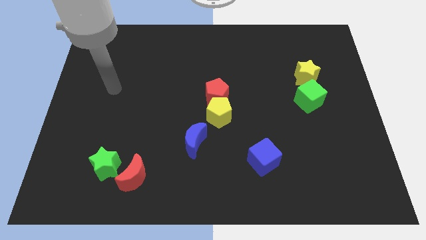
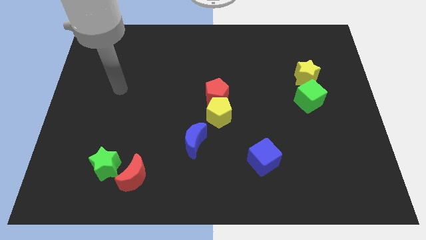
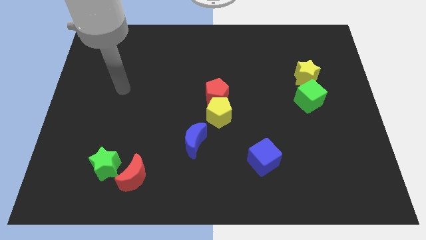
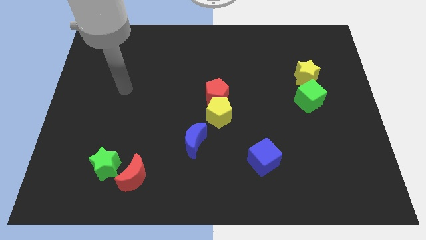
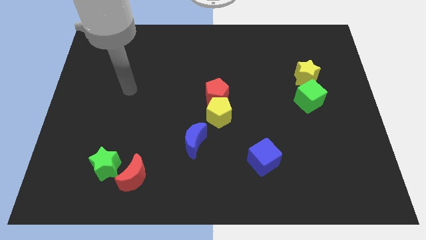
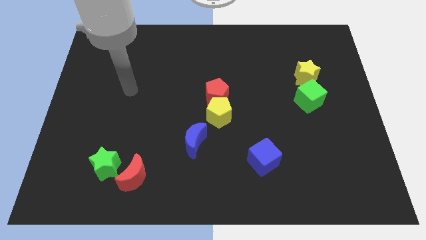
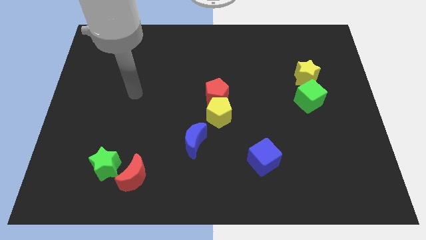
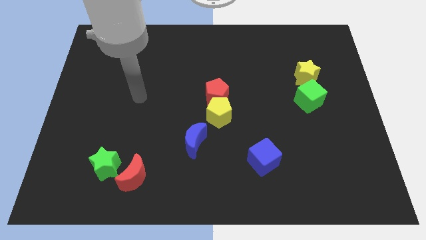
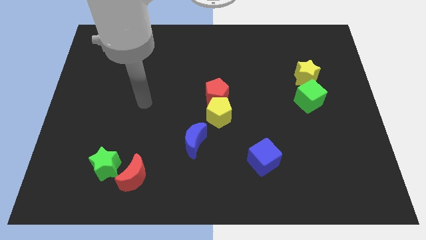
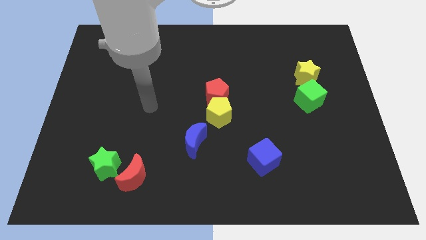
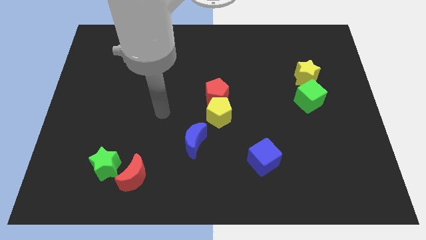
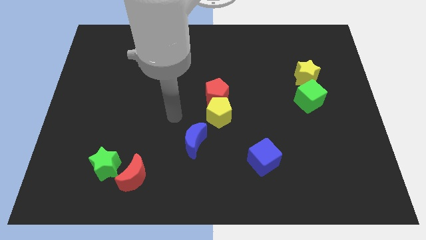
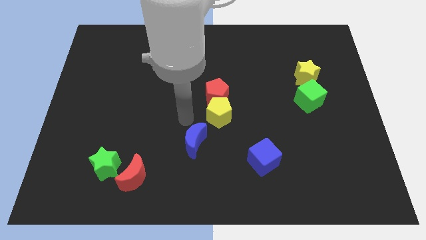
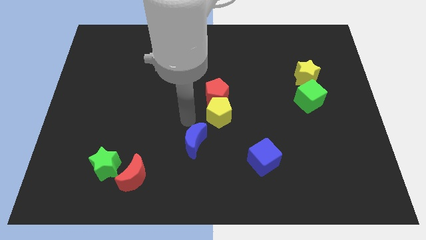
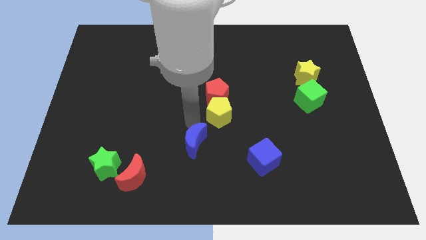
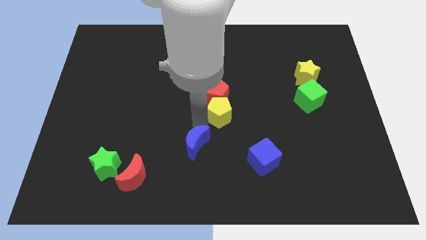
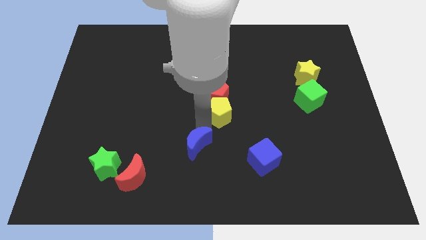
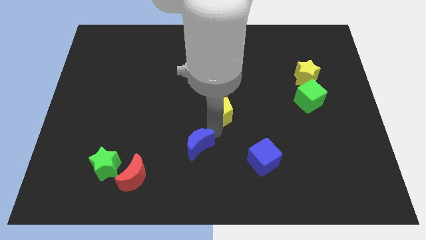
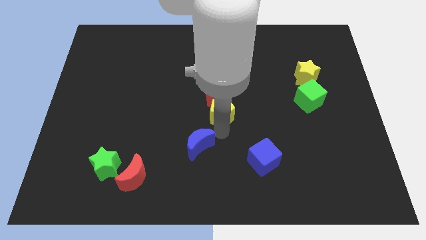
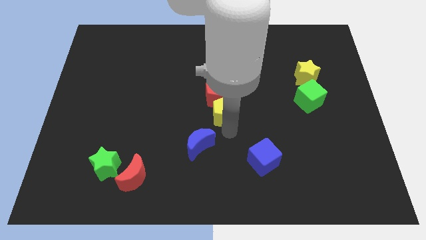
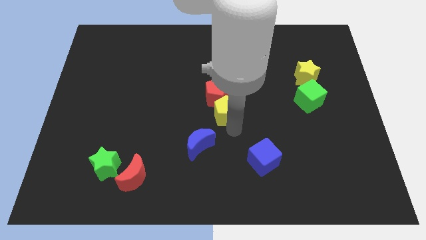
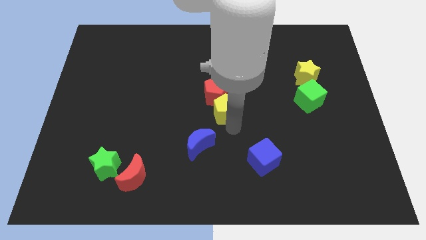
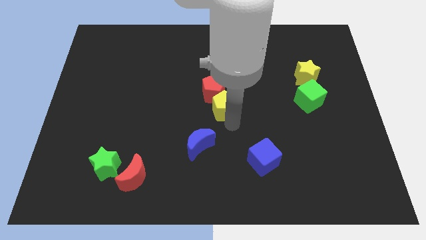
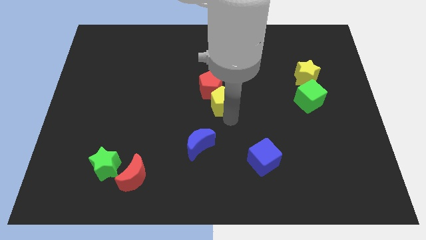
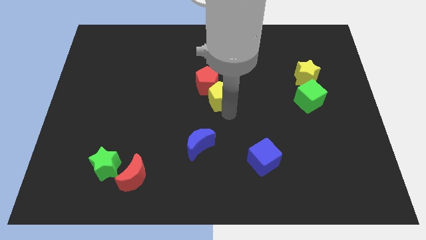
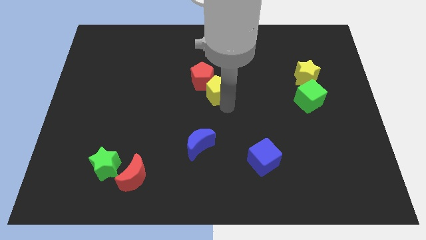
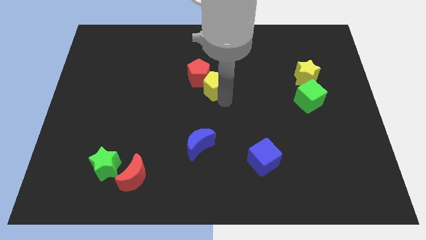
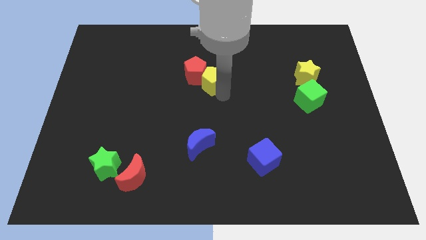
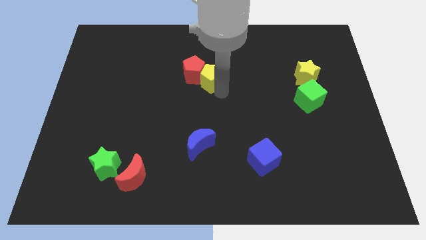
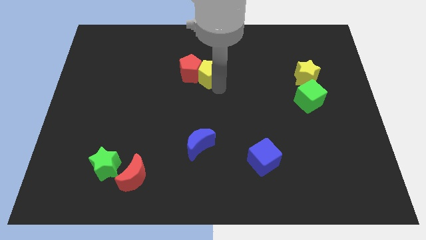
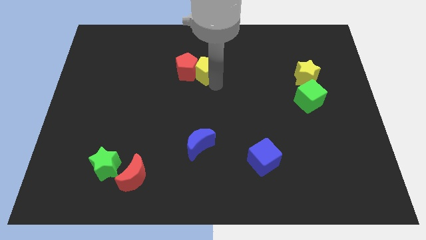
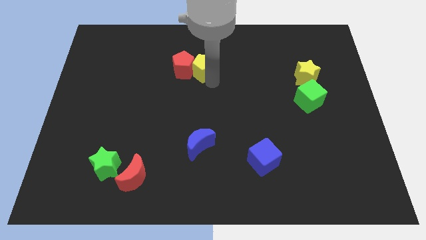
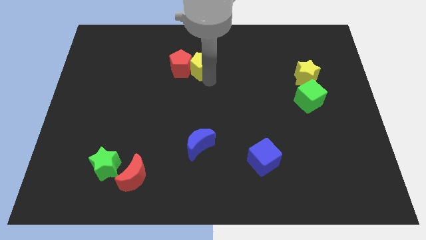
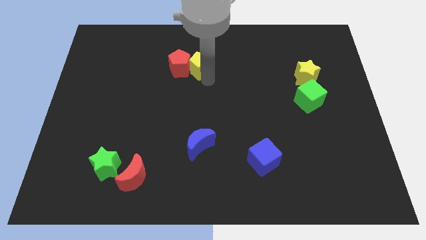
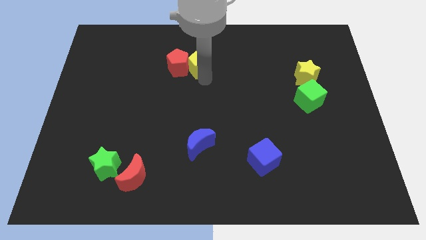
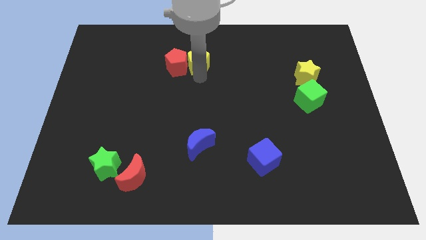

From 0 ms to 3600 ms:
move the red and the yellow pentagon diagonally top left to the green cube

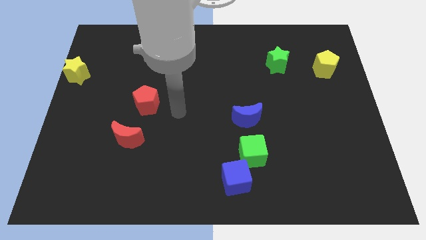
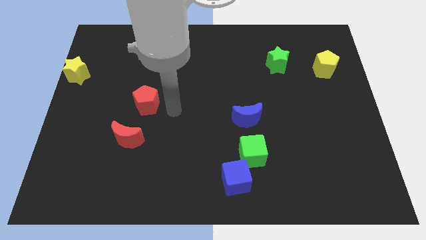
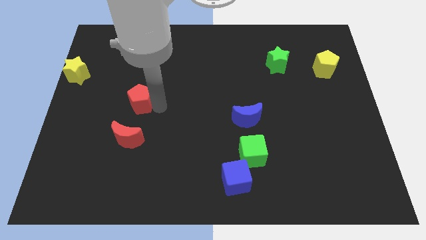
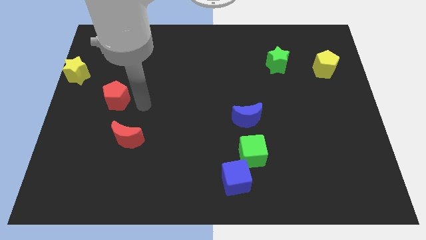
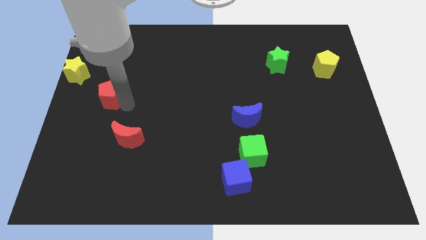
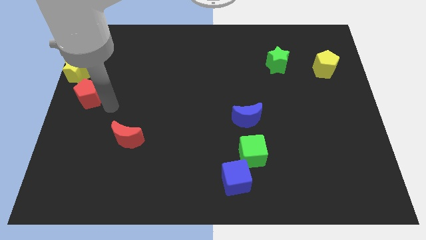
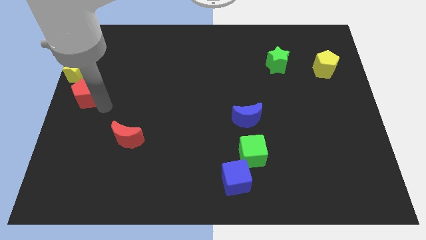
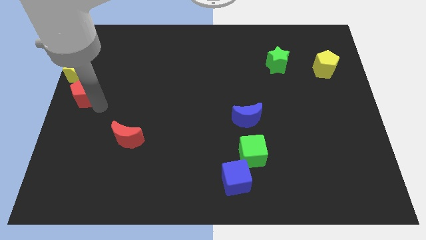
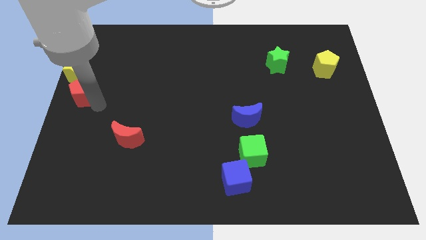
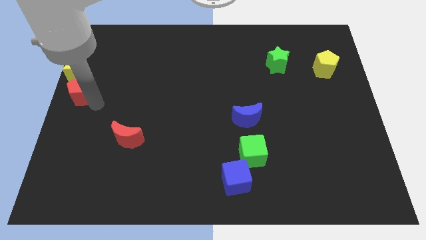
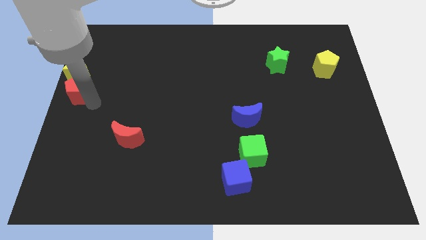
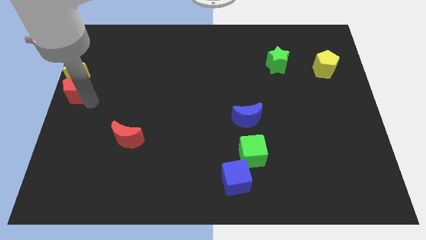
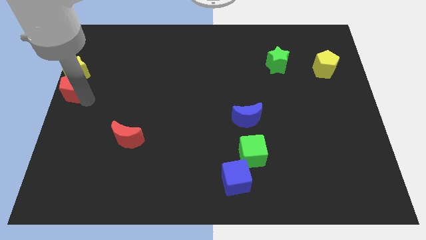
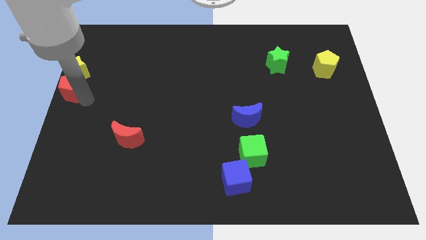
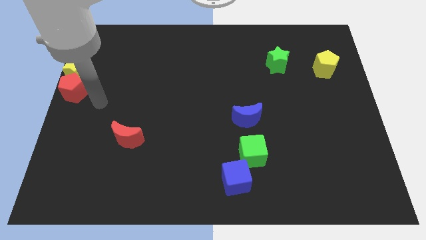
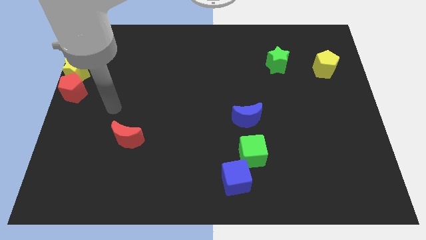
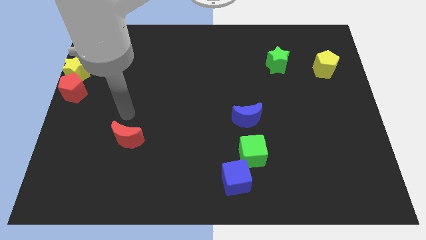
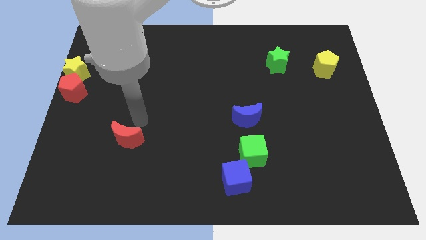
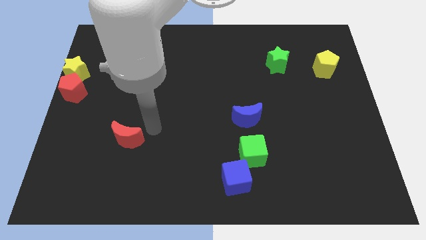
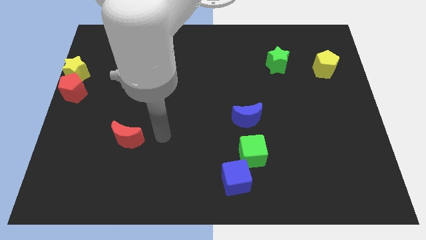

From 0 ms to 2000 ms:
push the red pentagon at the bottom of the yellow star

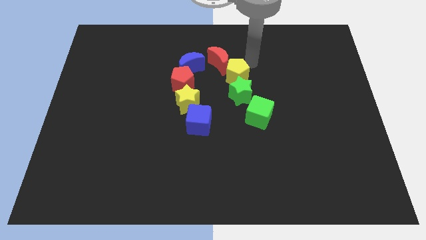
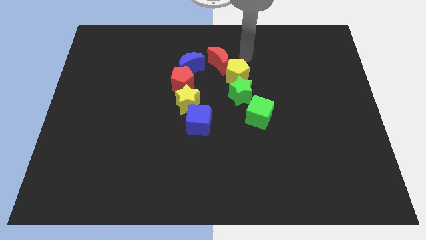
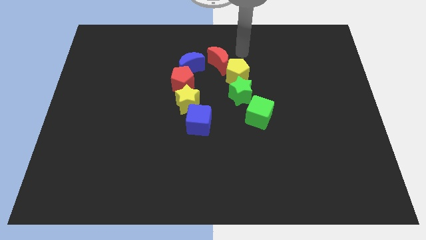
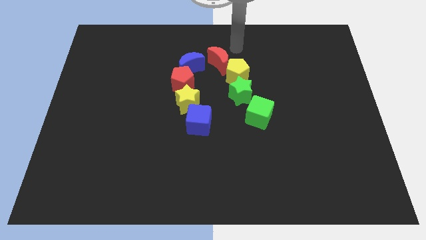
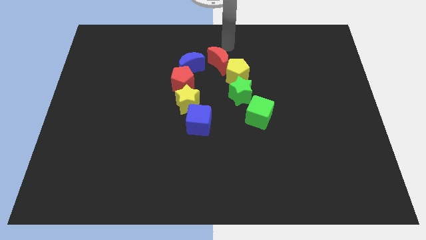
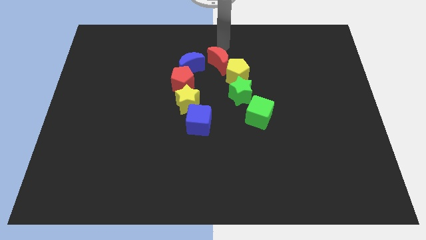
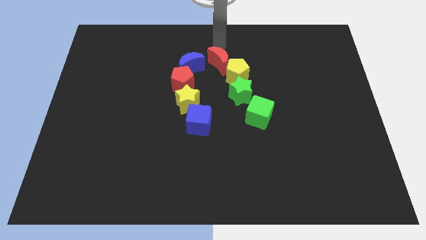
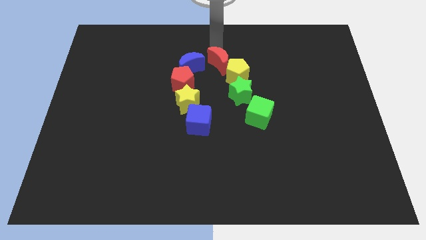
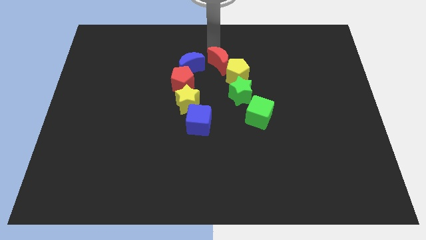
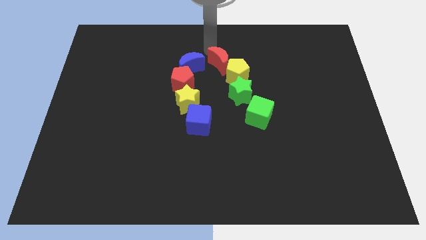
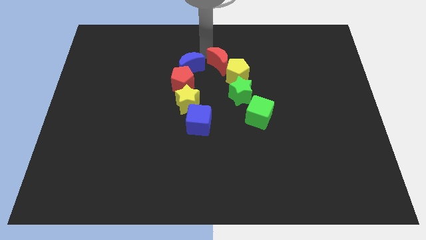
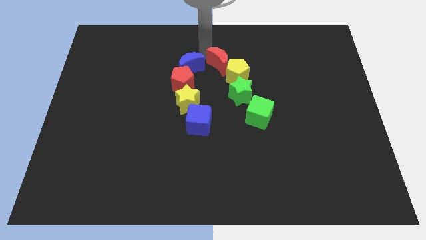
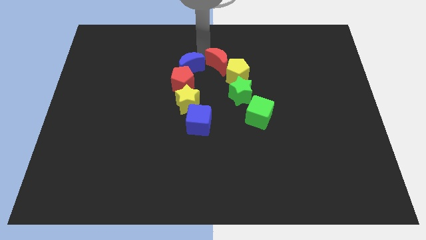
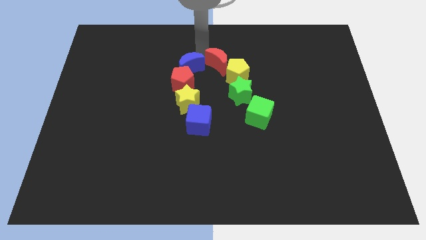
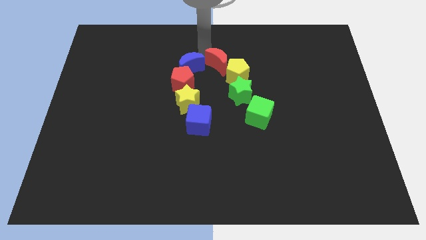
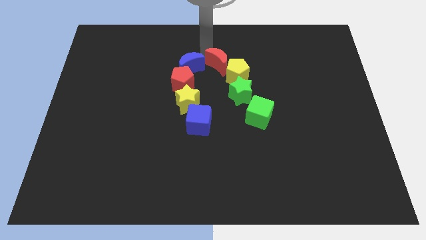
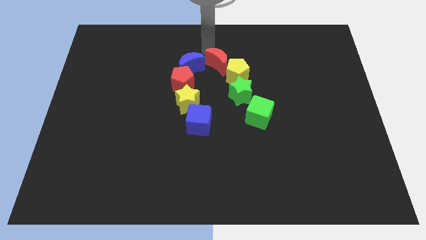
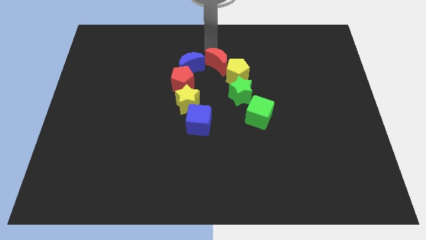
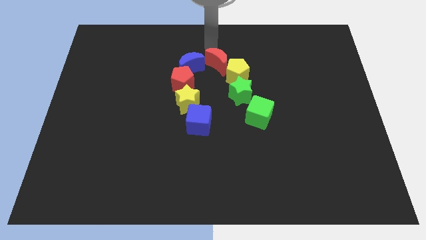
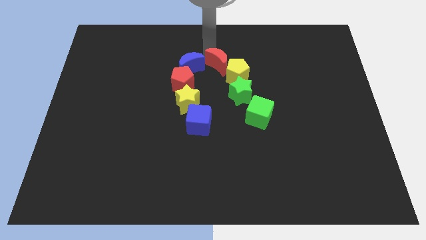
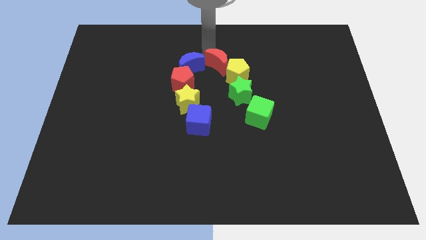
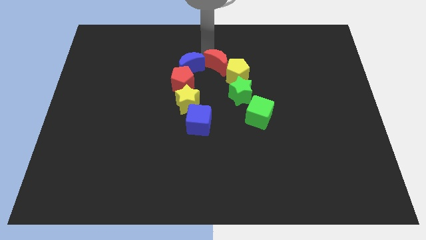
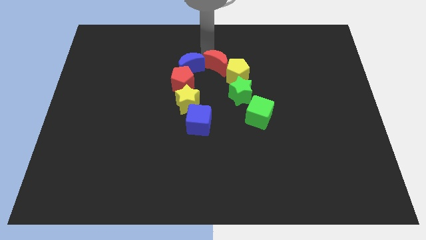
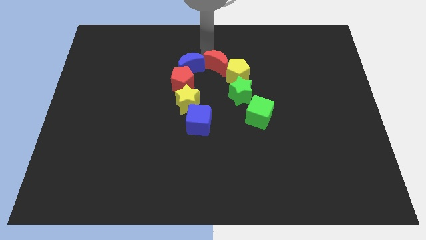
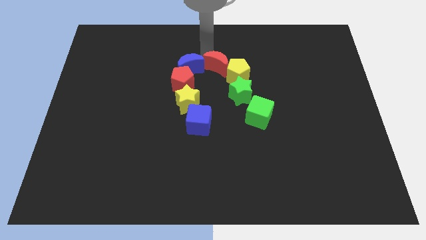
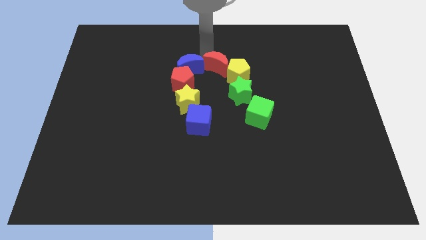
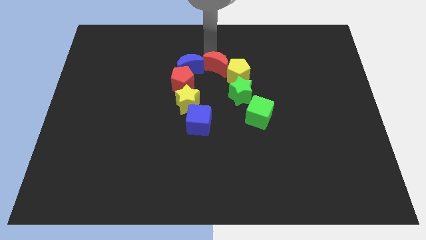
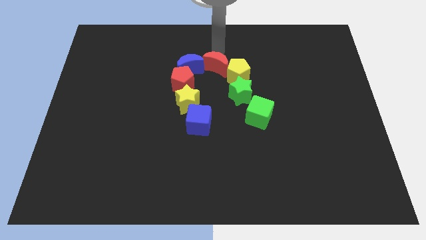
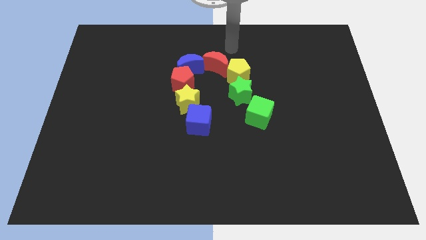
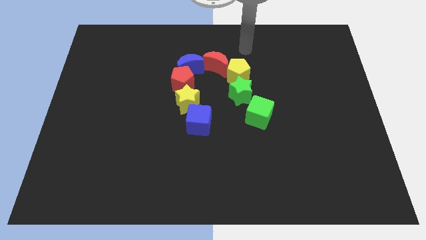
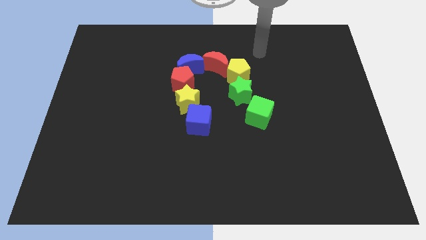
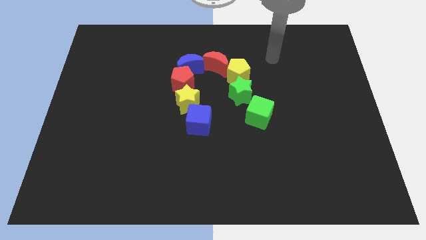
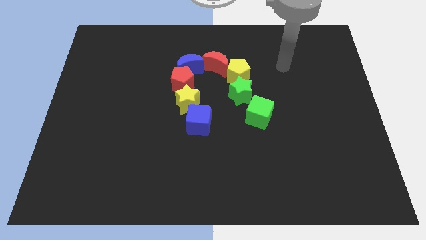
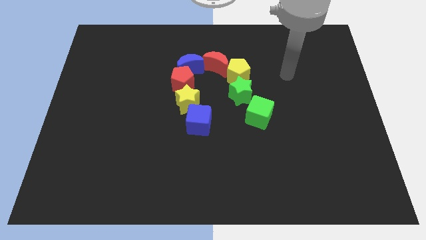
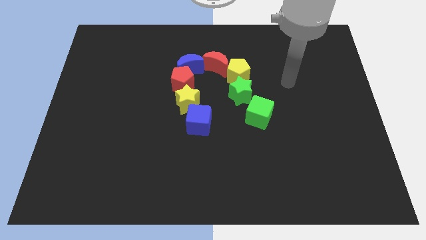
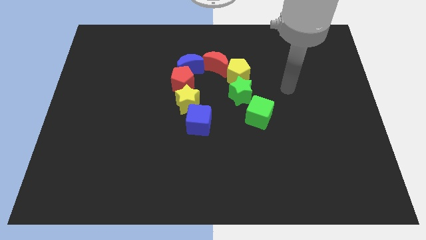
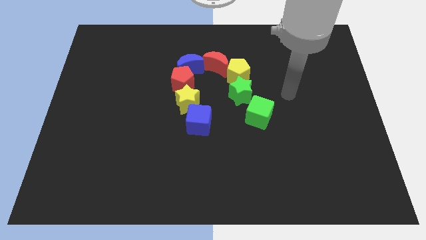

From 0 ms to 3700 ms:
push the red moon into blue moon
